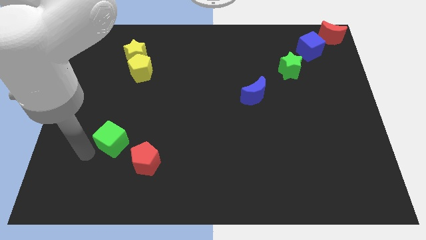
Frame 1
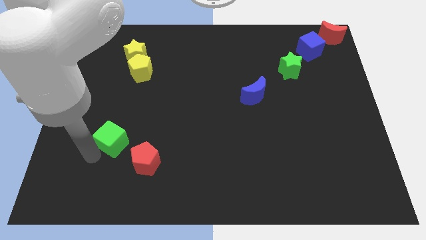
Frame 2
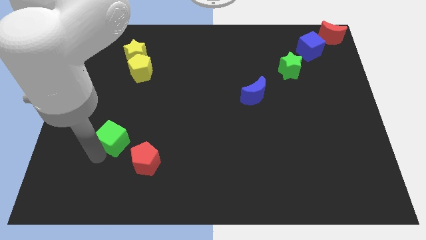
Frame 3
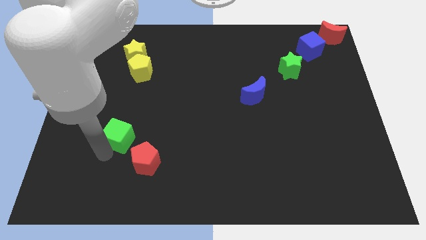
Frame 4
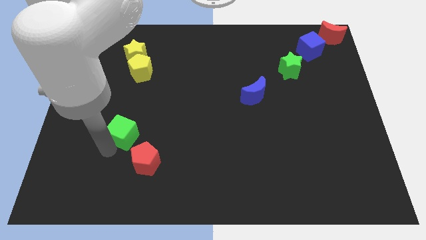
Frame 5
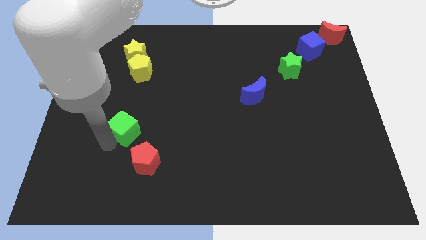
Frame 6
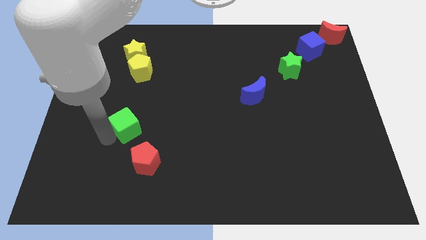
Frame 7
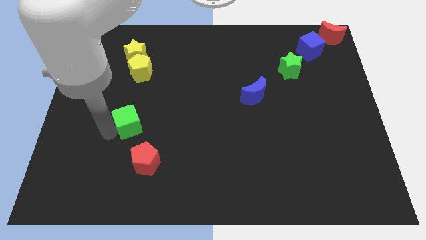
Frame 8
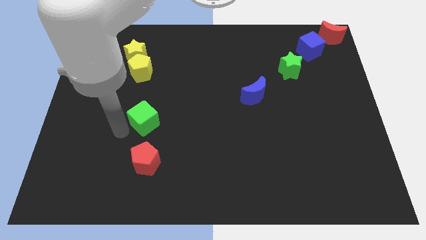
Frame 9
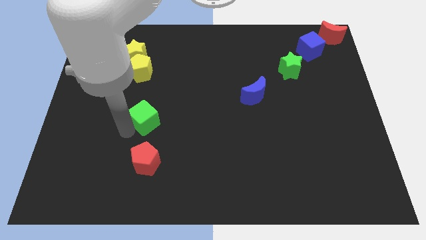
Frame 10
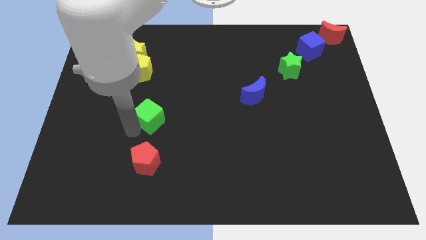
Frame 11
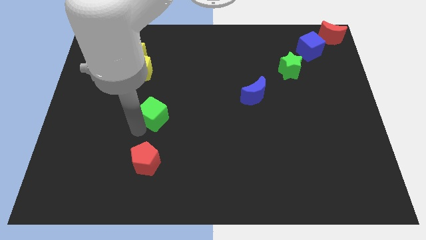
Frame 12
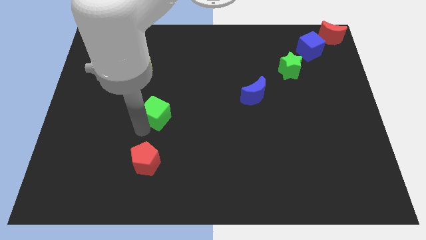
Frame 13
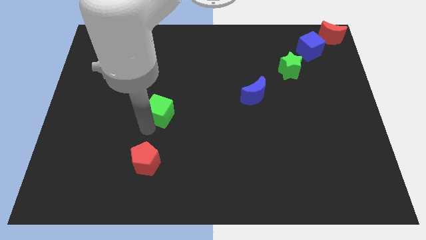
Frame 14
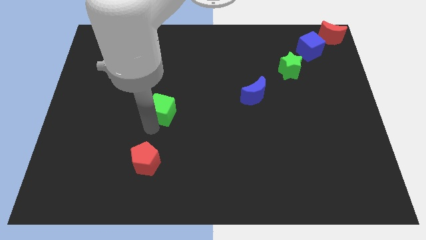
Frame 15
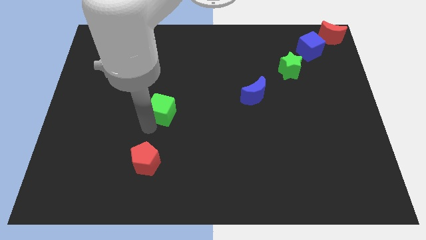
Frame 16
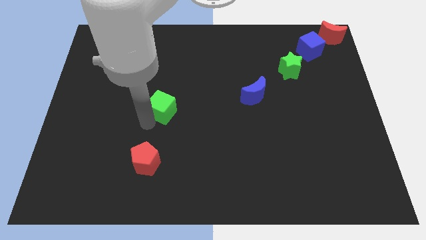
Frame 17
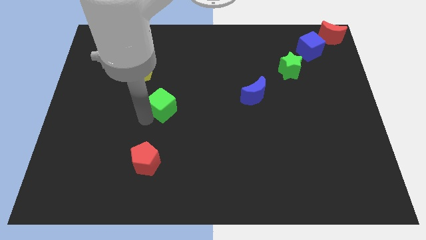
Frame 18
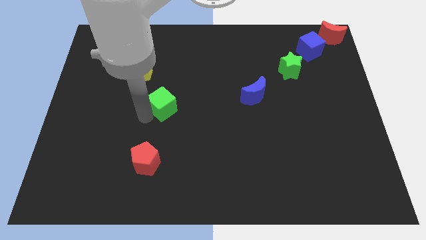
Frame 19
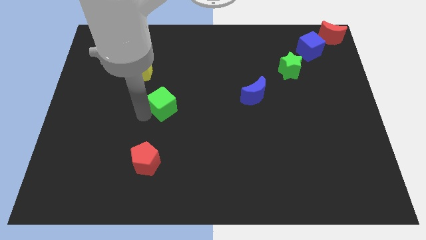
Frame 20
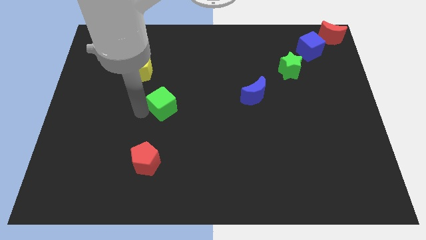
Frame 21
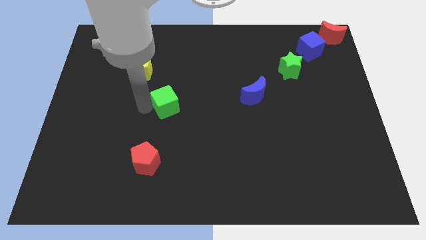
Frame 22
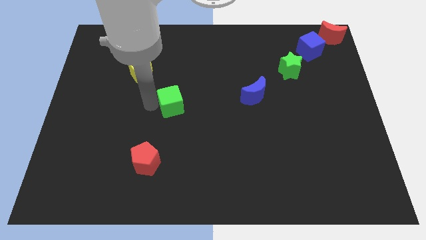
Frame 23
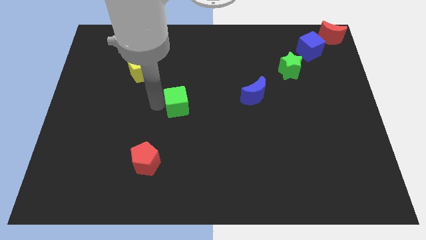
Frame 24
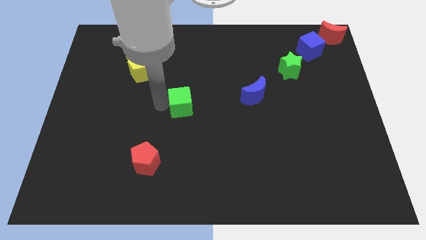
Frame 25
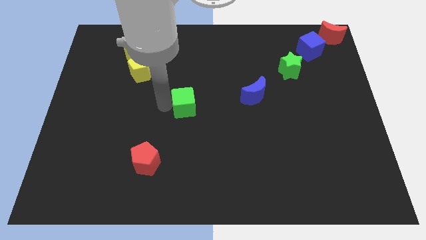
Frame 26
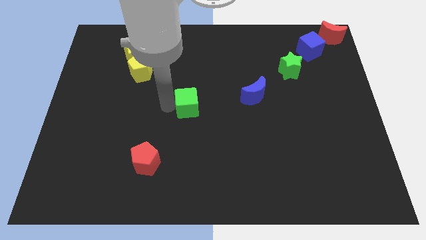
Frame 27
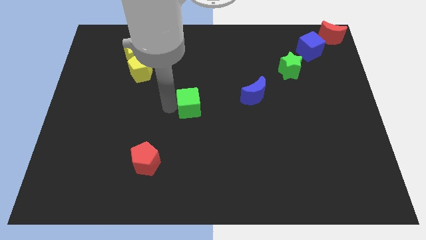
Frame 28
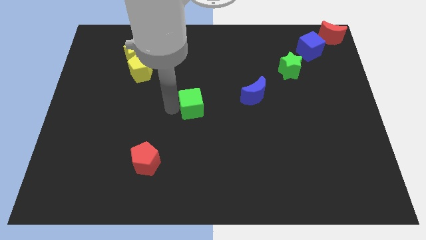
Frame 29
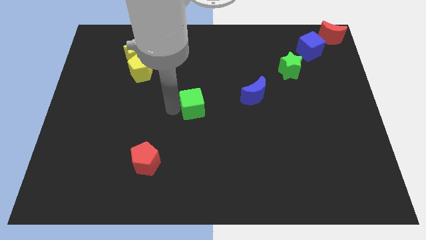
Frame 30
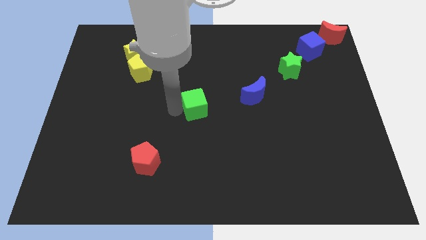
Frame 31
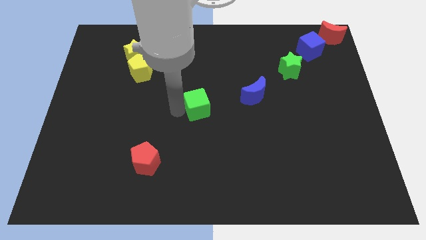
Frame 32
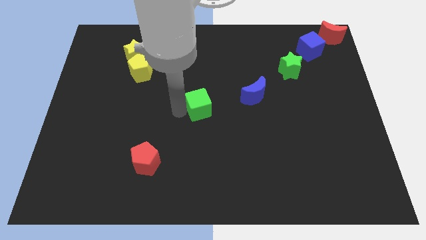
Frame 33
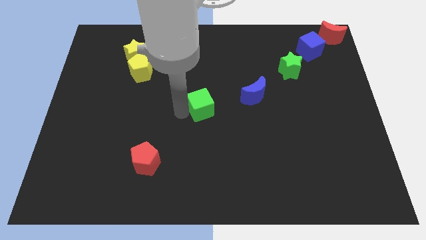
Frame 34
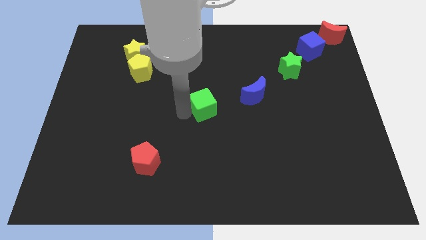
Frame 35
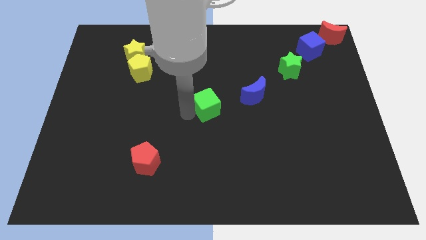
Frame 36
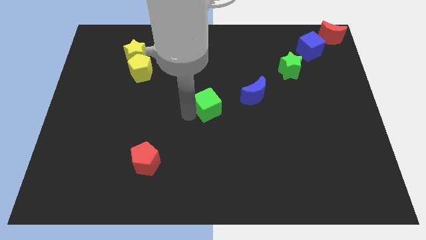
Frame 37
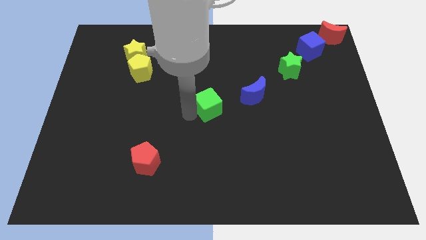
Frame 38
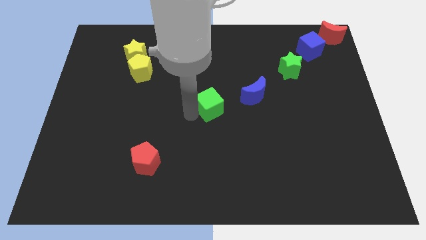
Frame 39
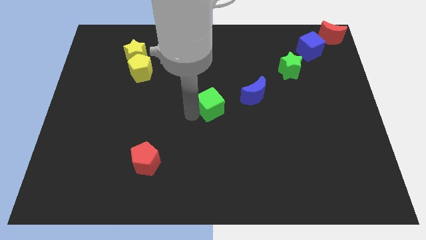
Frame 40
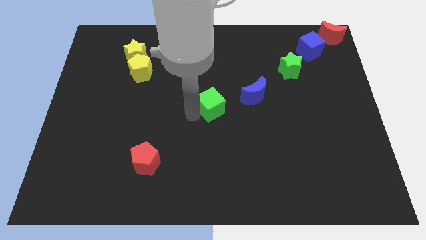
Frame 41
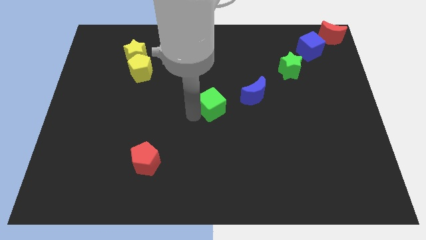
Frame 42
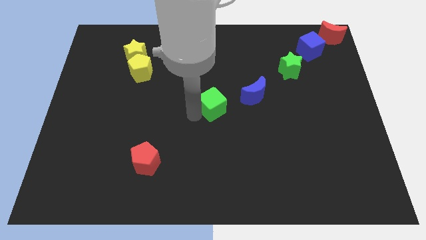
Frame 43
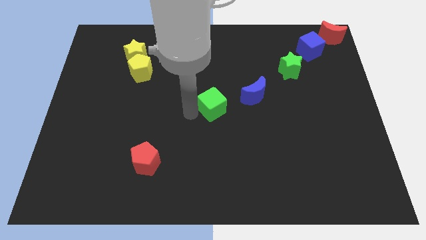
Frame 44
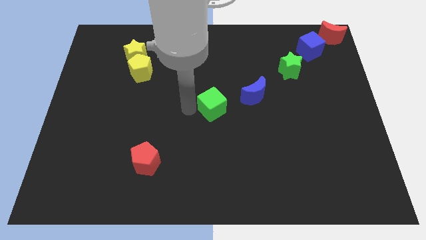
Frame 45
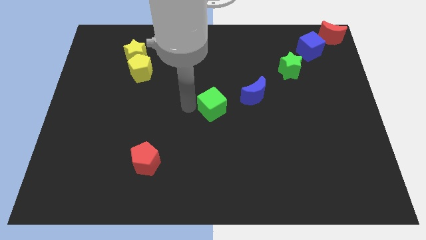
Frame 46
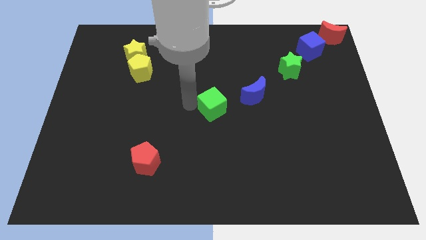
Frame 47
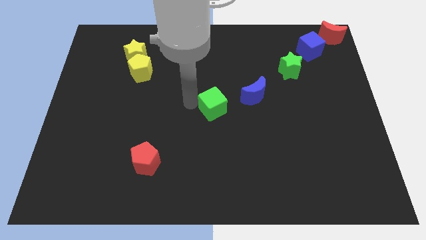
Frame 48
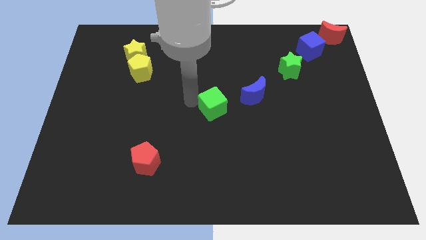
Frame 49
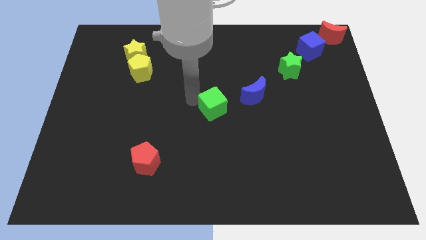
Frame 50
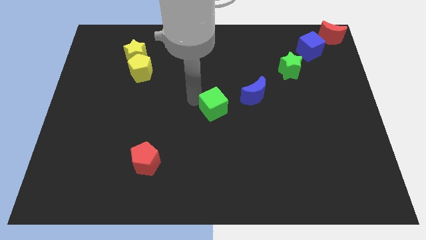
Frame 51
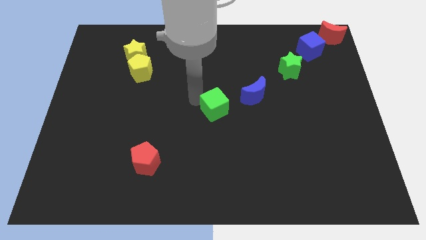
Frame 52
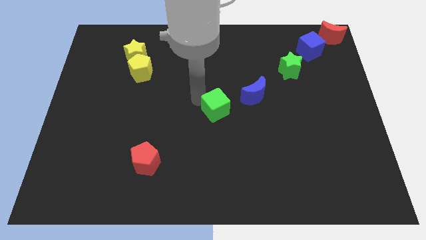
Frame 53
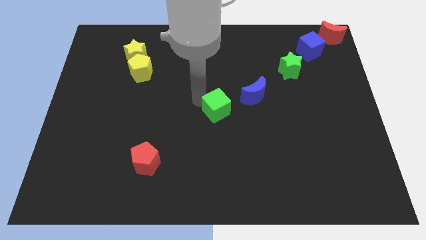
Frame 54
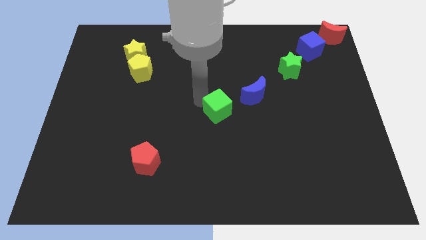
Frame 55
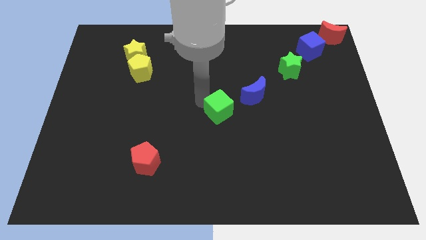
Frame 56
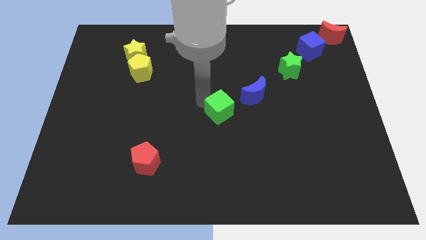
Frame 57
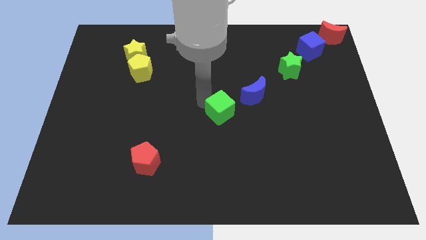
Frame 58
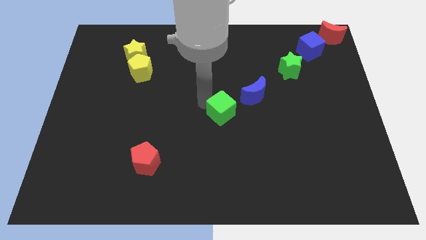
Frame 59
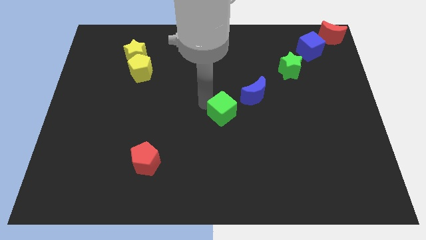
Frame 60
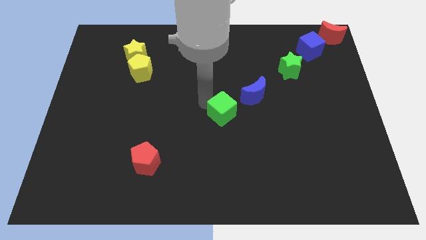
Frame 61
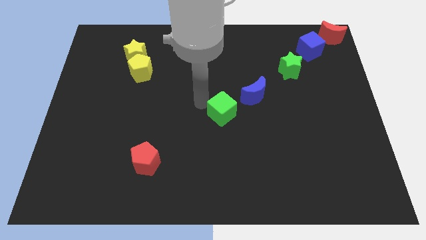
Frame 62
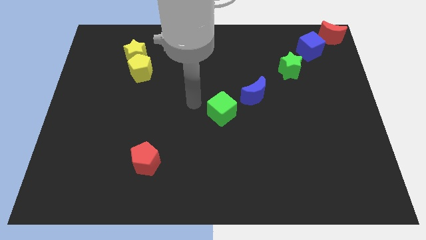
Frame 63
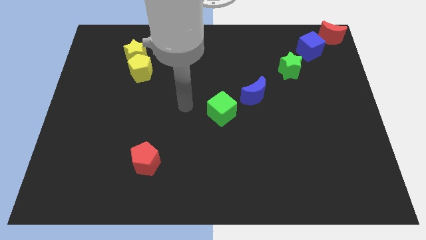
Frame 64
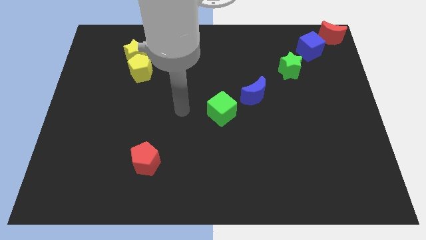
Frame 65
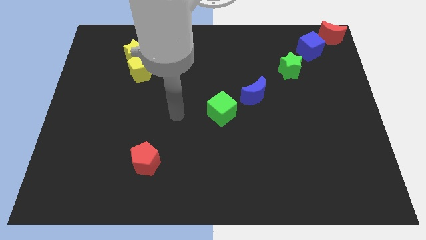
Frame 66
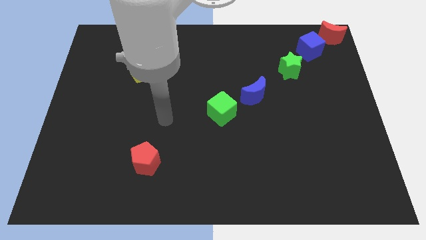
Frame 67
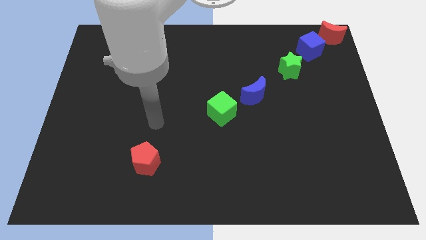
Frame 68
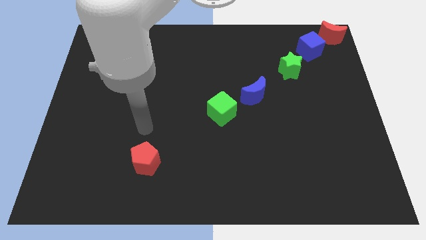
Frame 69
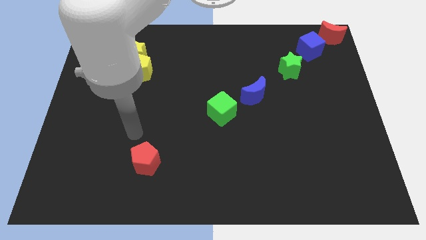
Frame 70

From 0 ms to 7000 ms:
place the green cube to the left bottom of the blue crescent

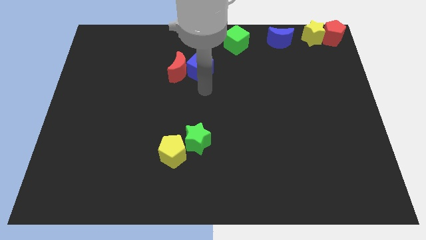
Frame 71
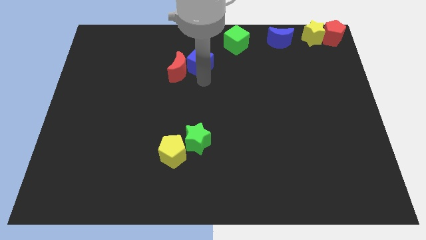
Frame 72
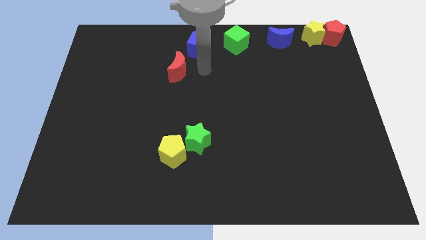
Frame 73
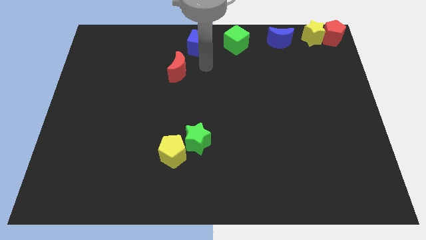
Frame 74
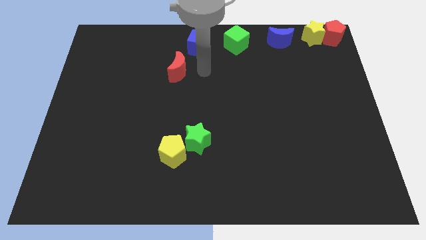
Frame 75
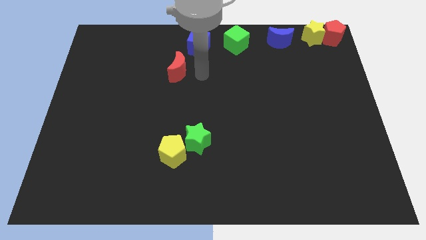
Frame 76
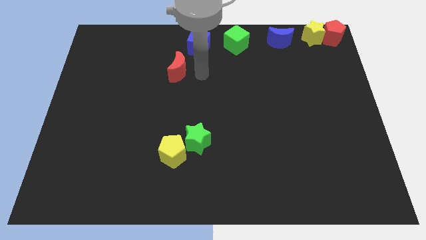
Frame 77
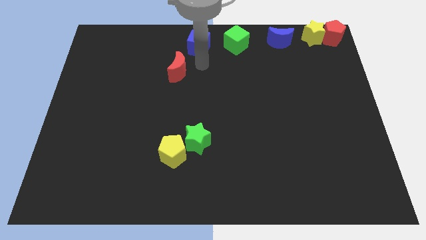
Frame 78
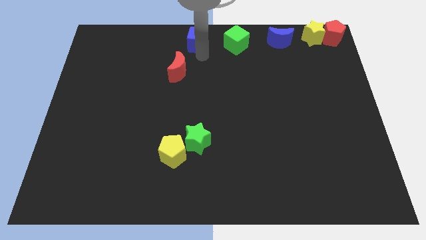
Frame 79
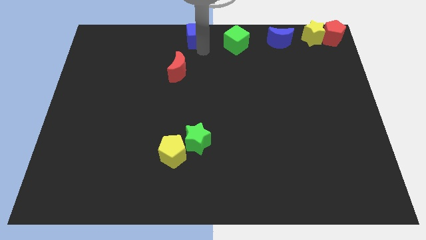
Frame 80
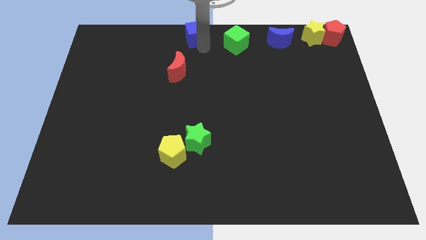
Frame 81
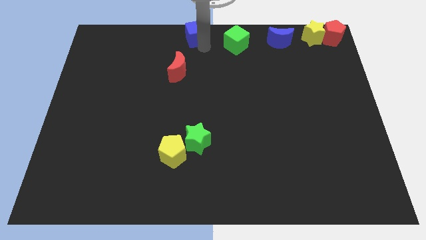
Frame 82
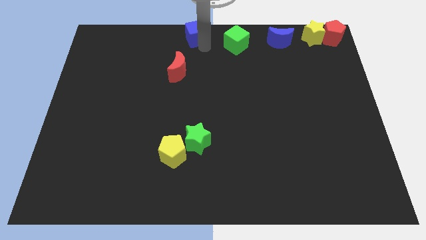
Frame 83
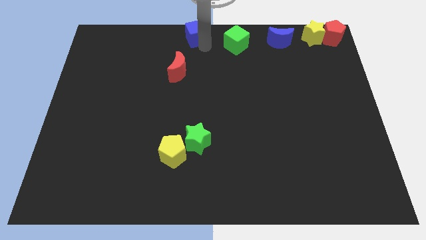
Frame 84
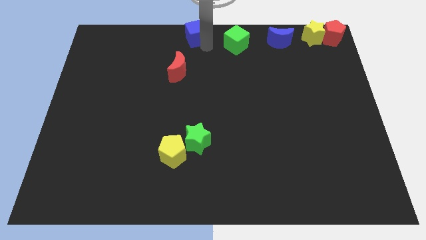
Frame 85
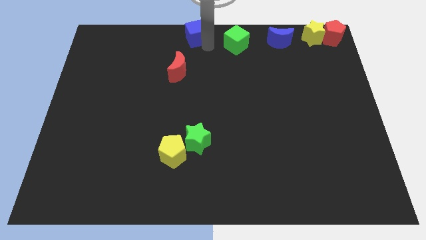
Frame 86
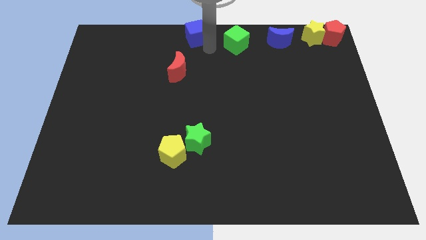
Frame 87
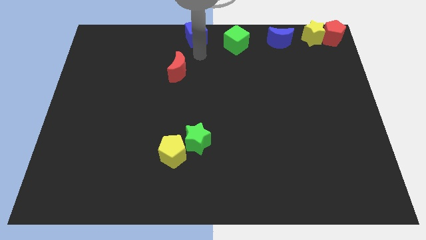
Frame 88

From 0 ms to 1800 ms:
separate blue cube and red moon

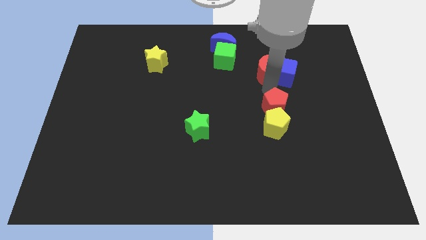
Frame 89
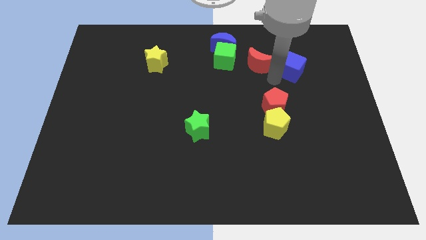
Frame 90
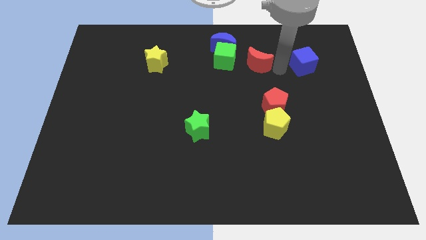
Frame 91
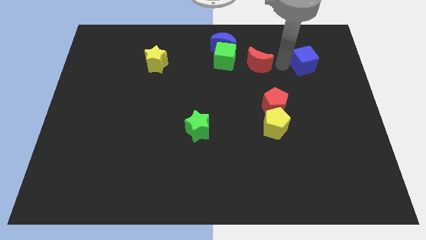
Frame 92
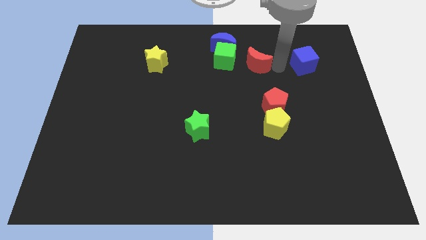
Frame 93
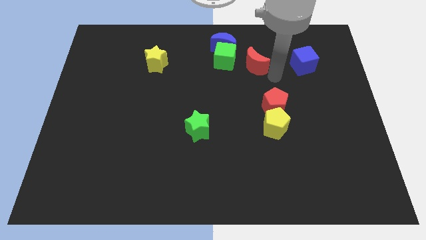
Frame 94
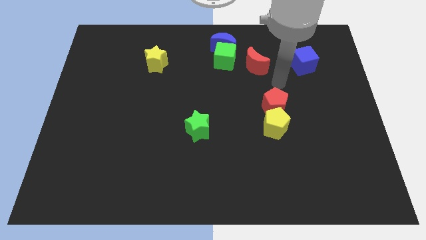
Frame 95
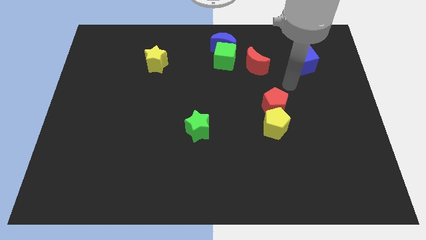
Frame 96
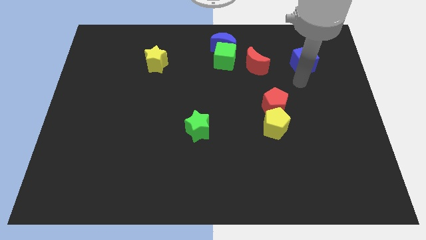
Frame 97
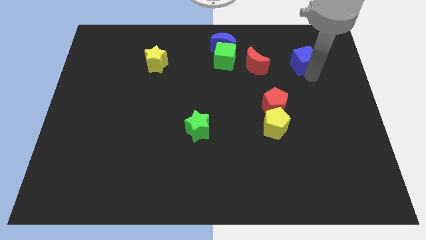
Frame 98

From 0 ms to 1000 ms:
separate blue cube from the red moon
